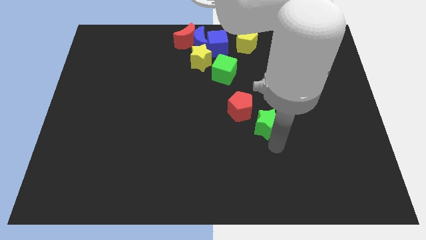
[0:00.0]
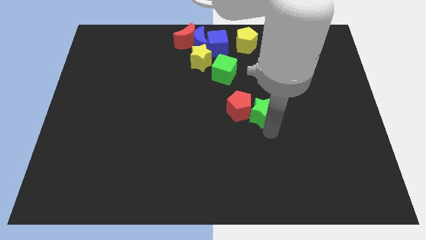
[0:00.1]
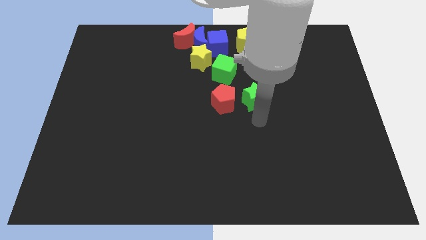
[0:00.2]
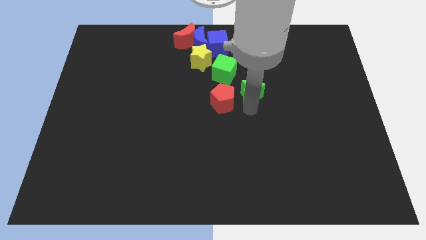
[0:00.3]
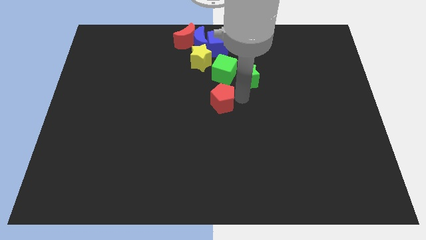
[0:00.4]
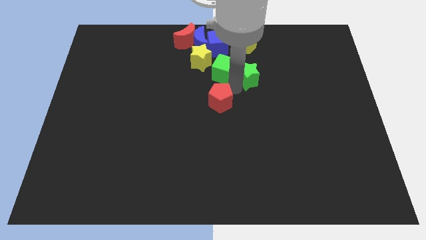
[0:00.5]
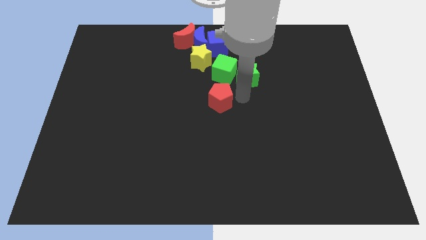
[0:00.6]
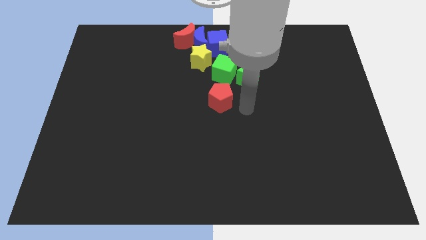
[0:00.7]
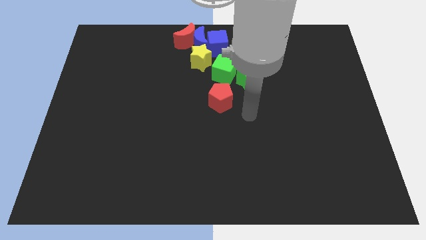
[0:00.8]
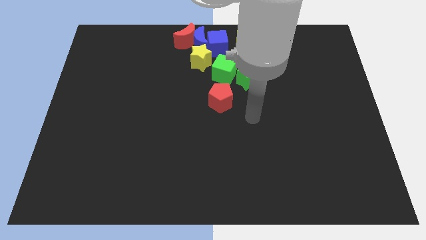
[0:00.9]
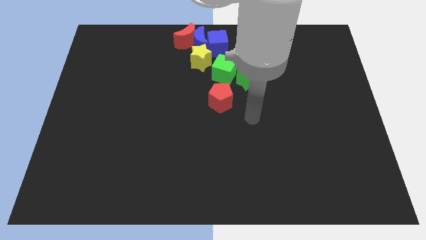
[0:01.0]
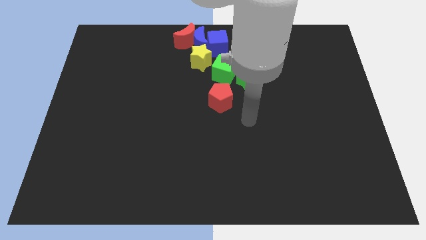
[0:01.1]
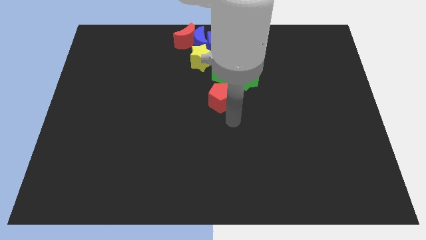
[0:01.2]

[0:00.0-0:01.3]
move the green star to the right of the green cube

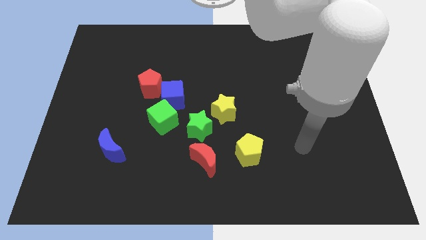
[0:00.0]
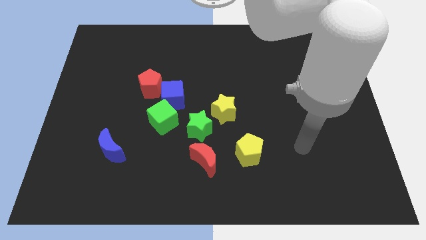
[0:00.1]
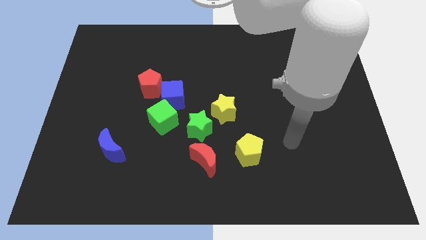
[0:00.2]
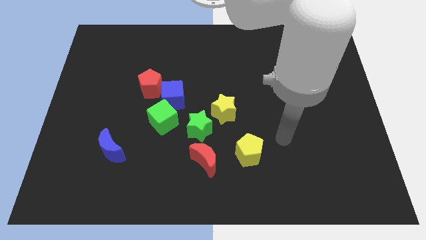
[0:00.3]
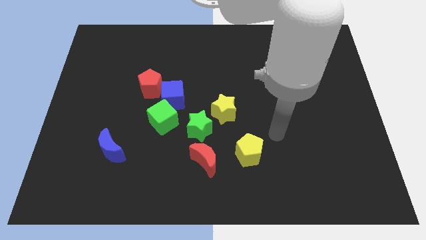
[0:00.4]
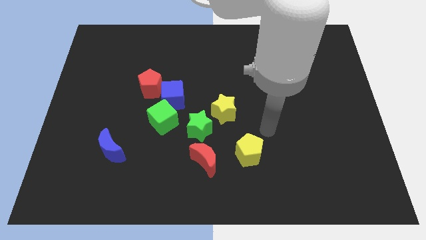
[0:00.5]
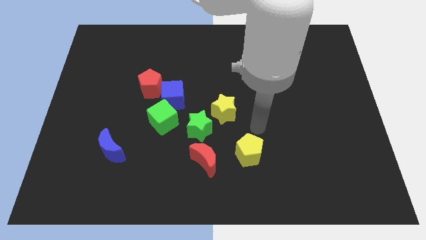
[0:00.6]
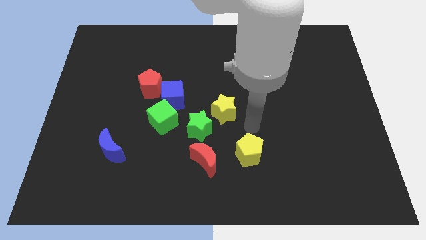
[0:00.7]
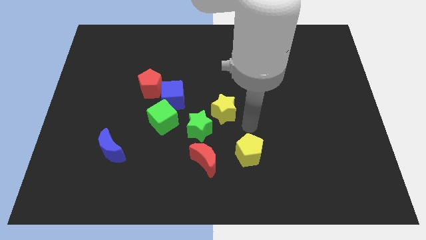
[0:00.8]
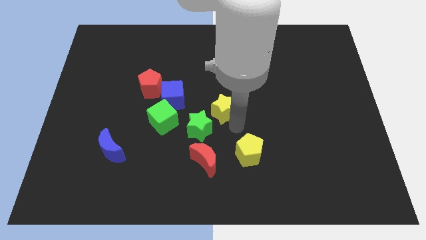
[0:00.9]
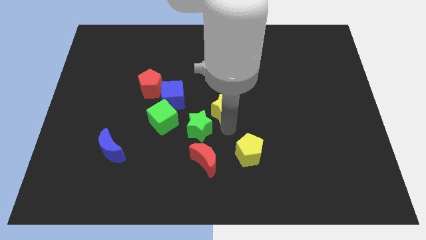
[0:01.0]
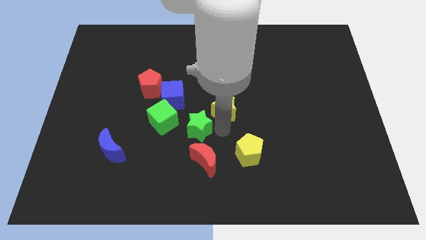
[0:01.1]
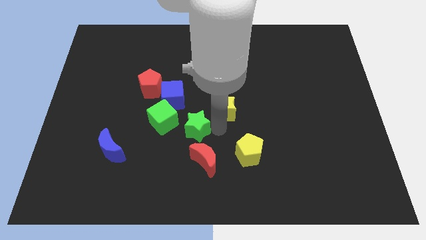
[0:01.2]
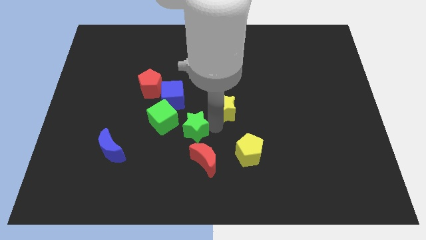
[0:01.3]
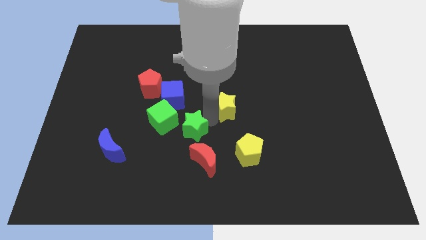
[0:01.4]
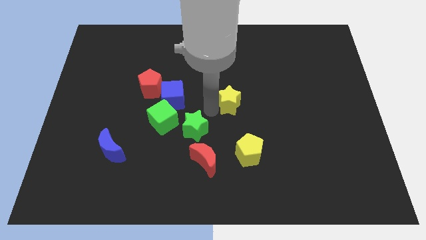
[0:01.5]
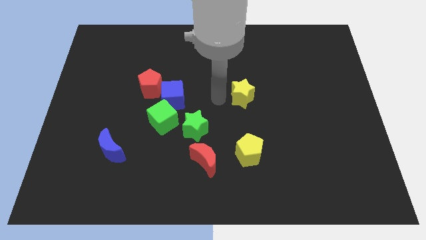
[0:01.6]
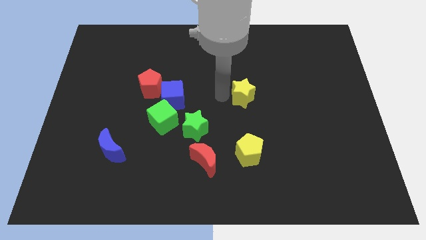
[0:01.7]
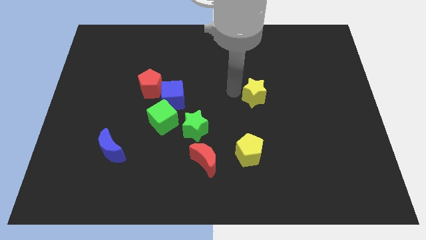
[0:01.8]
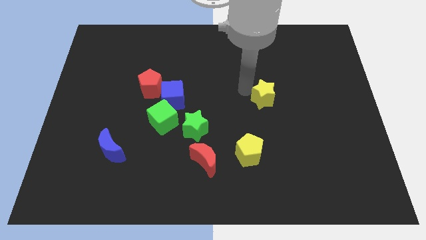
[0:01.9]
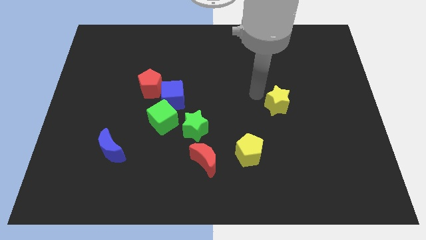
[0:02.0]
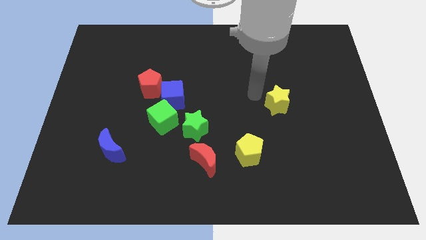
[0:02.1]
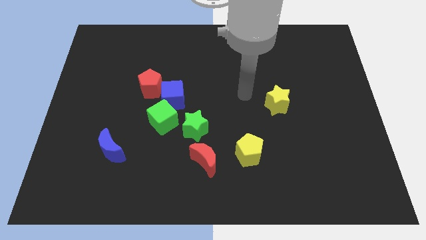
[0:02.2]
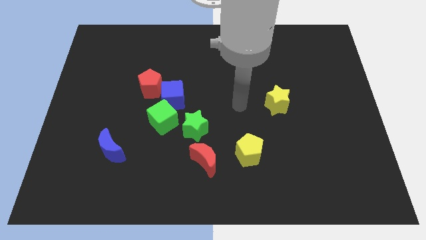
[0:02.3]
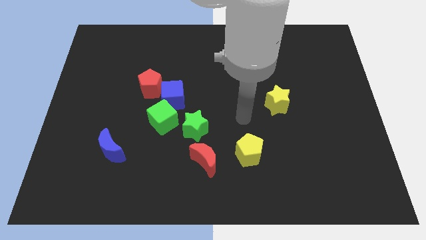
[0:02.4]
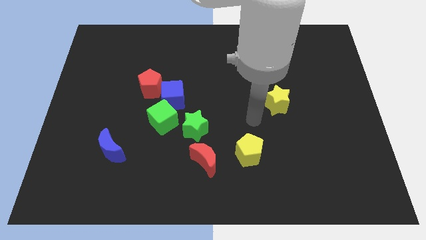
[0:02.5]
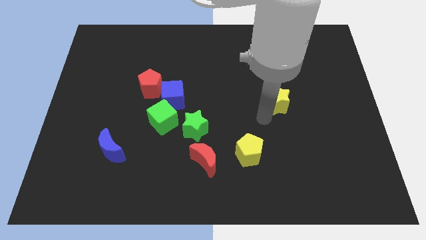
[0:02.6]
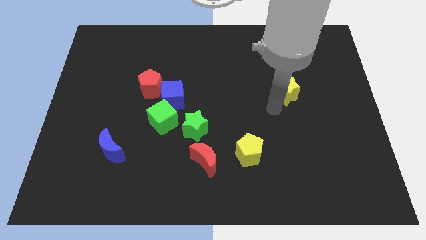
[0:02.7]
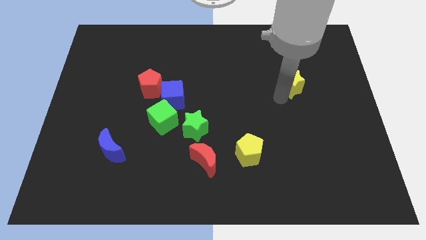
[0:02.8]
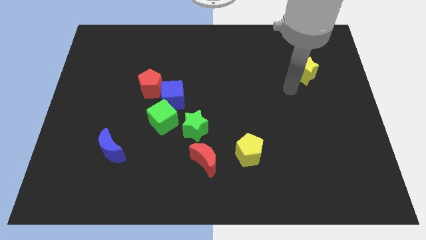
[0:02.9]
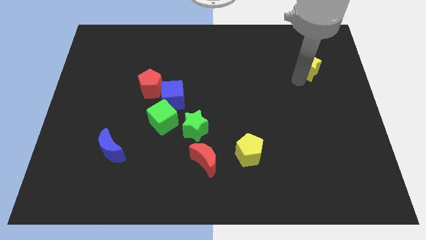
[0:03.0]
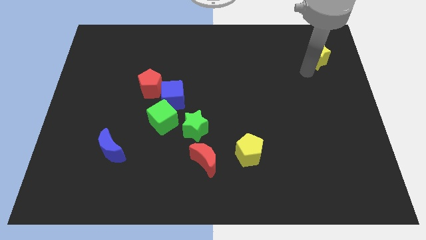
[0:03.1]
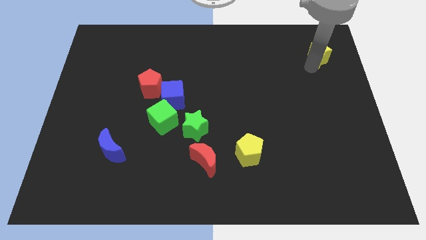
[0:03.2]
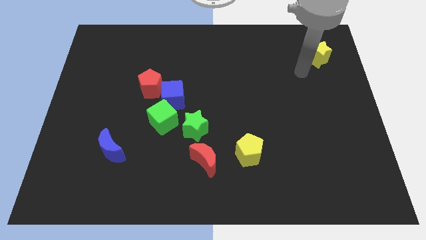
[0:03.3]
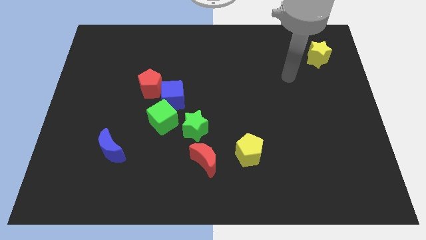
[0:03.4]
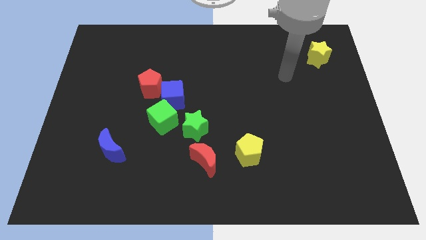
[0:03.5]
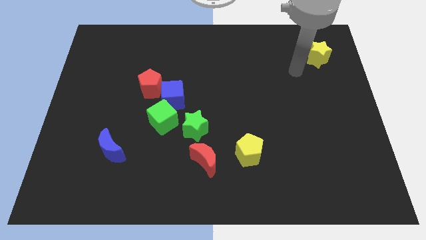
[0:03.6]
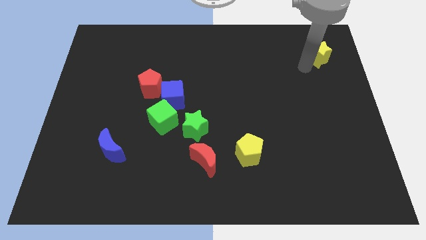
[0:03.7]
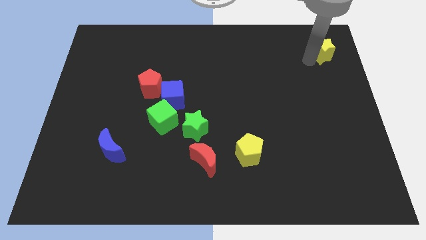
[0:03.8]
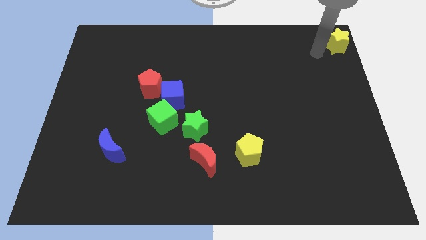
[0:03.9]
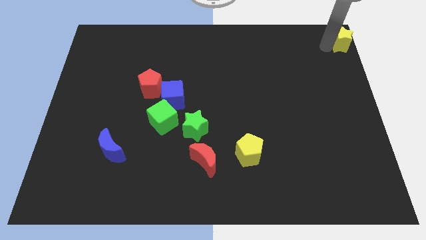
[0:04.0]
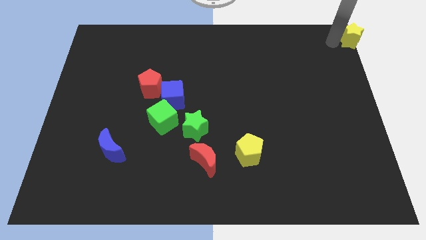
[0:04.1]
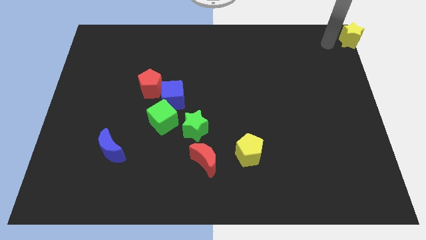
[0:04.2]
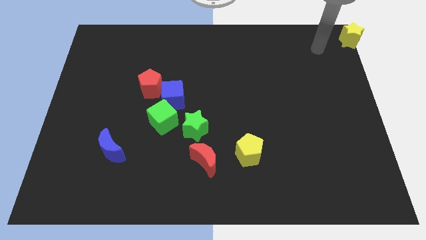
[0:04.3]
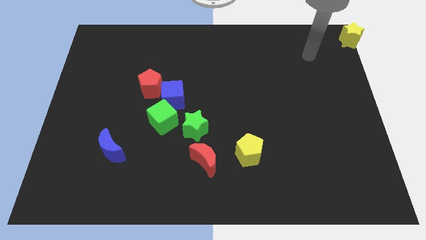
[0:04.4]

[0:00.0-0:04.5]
push the yellow star away from the green star

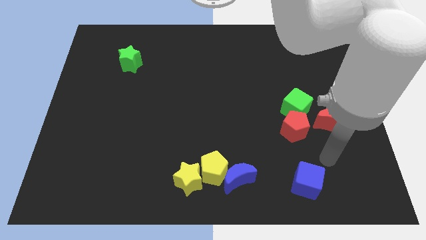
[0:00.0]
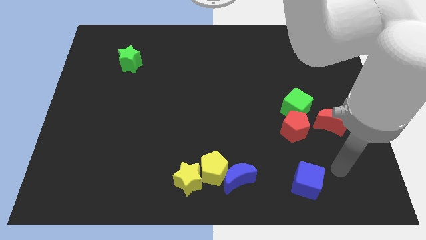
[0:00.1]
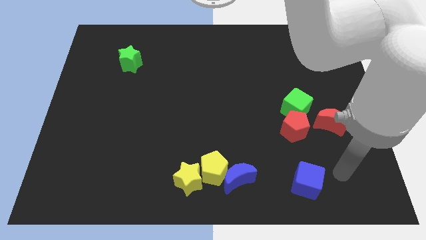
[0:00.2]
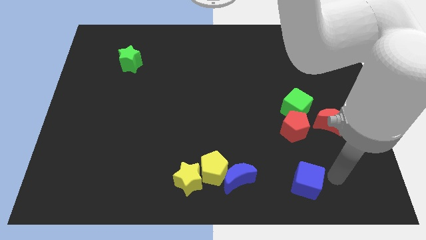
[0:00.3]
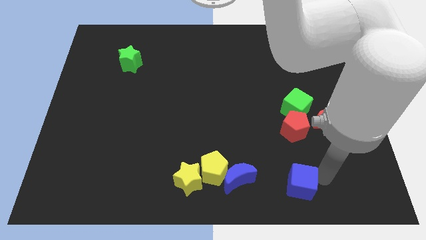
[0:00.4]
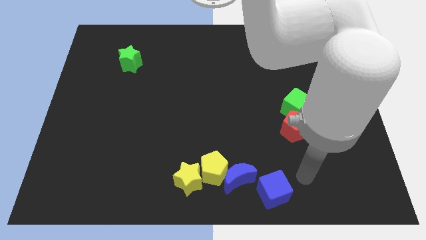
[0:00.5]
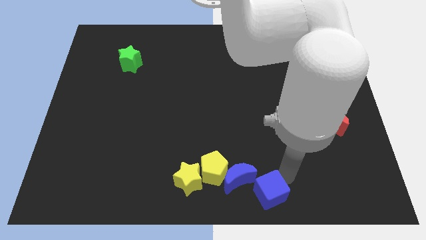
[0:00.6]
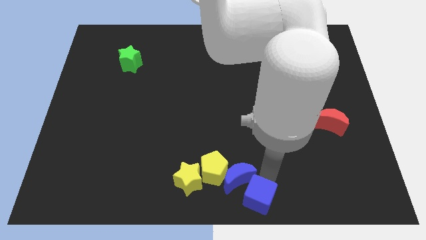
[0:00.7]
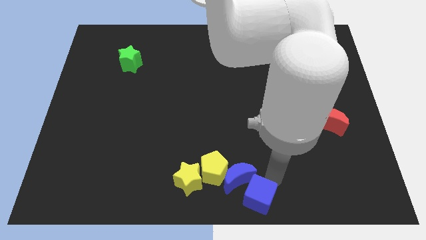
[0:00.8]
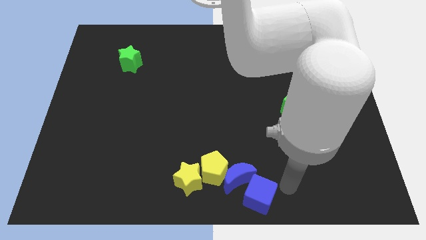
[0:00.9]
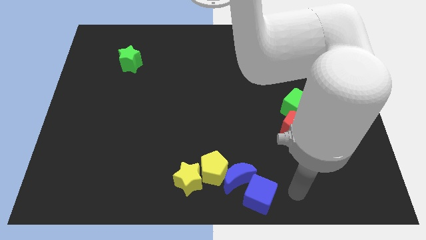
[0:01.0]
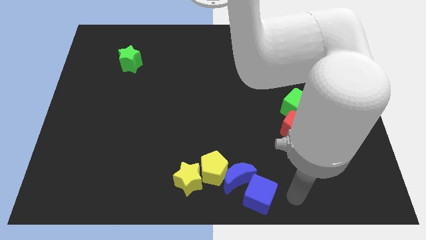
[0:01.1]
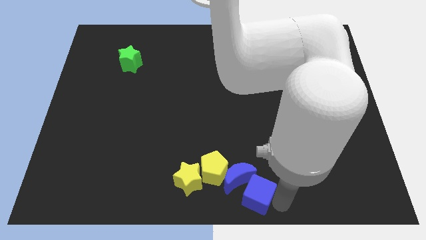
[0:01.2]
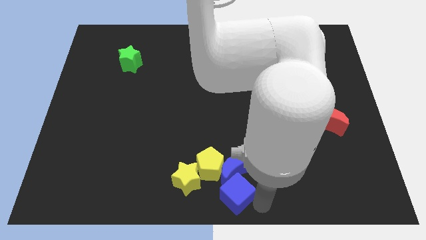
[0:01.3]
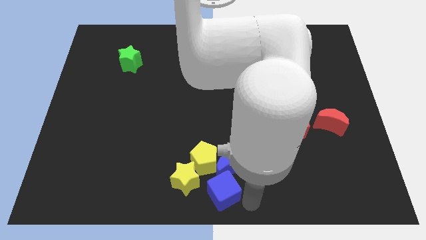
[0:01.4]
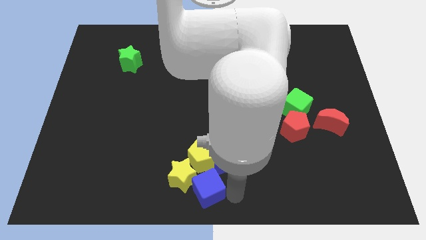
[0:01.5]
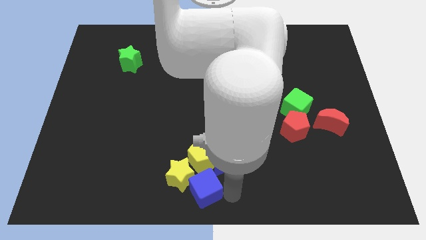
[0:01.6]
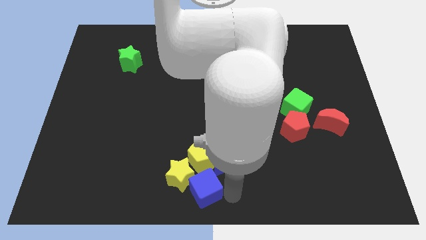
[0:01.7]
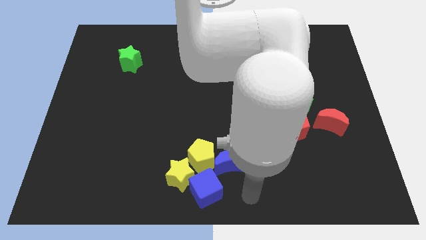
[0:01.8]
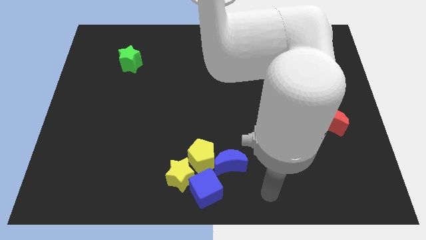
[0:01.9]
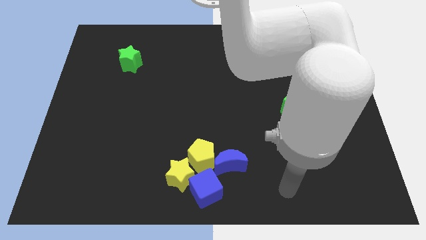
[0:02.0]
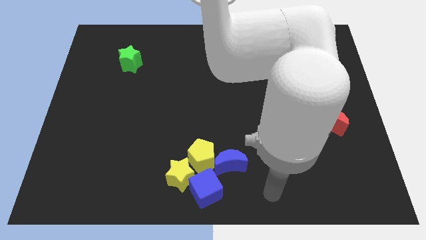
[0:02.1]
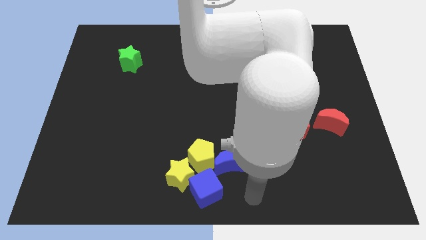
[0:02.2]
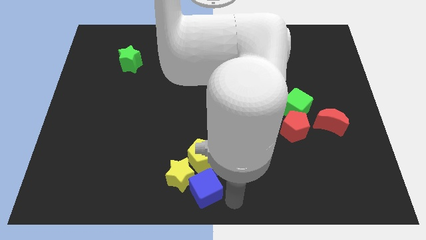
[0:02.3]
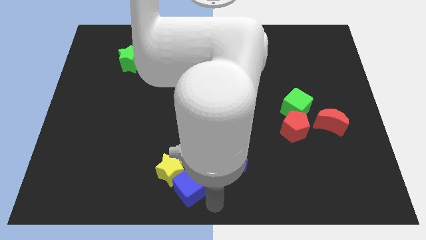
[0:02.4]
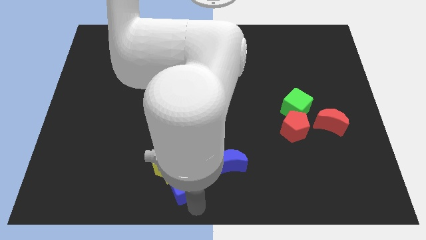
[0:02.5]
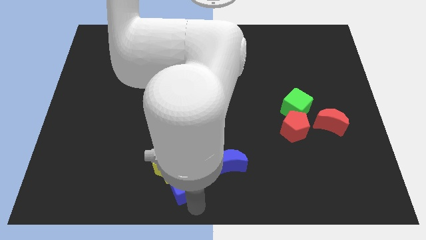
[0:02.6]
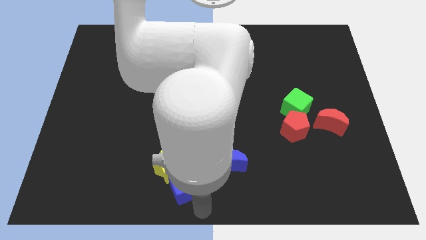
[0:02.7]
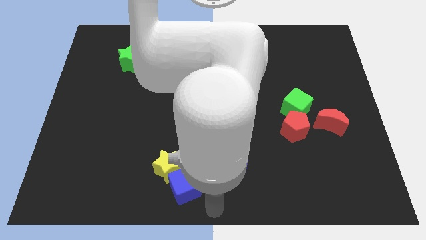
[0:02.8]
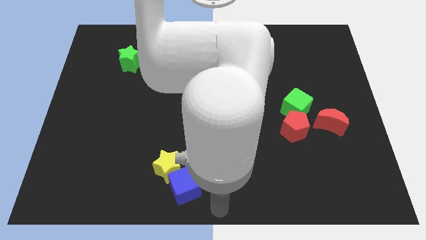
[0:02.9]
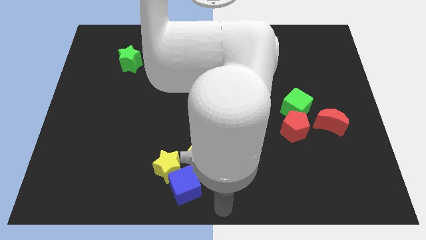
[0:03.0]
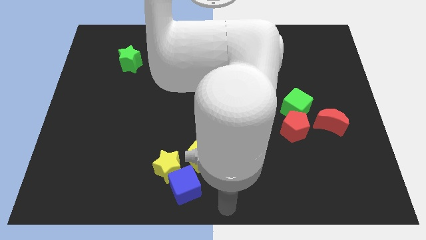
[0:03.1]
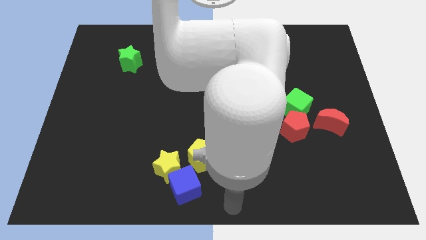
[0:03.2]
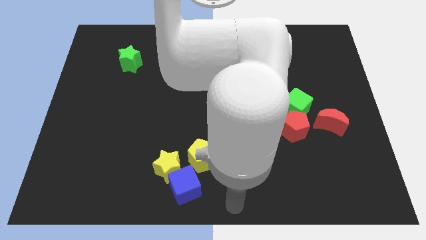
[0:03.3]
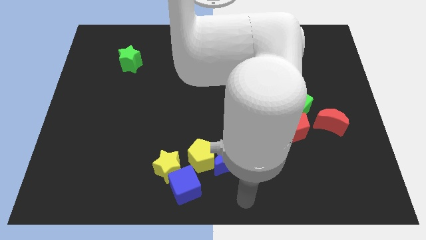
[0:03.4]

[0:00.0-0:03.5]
push a group of blocks slightly upward
